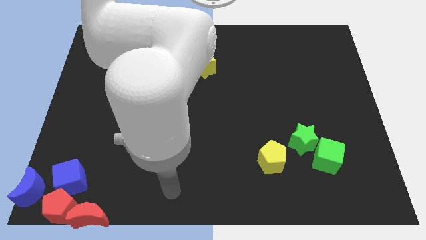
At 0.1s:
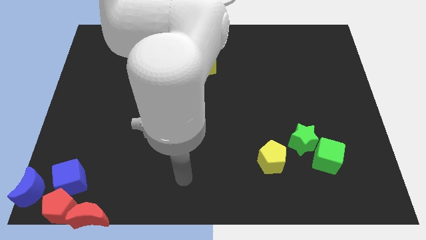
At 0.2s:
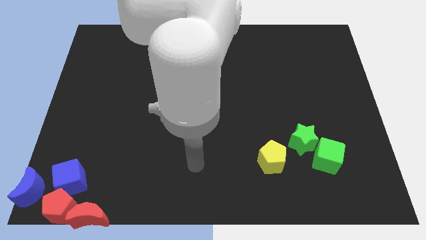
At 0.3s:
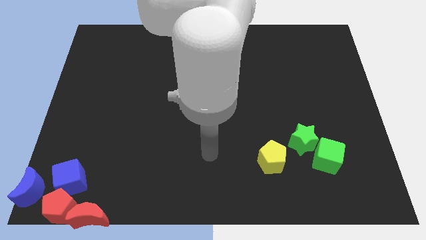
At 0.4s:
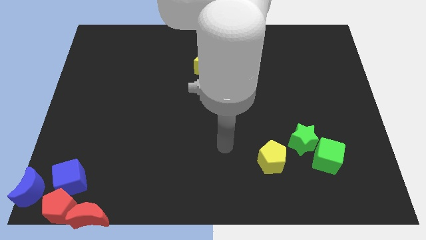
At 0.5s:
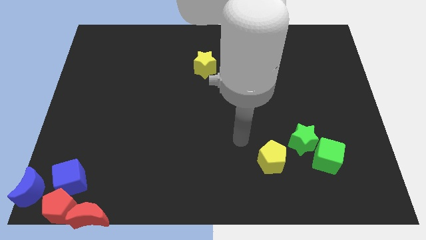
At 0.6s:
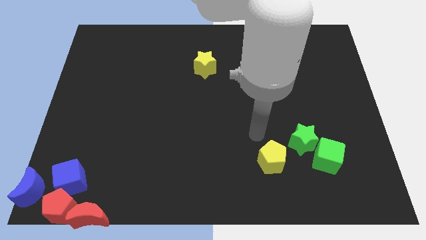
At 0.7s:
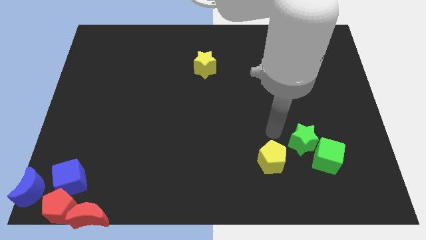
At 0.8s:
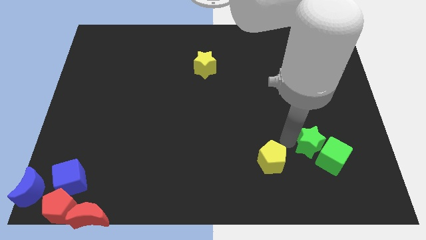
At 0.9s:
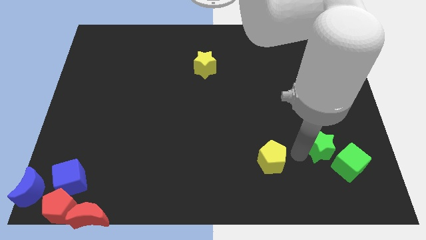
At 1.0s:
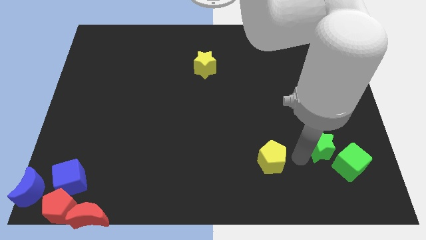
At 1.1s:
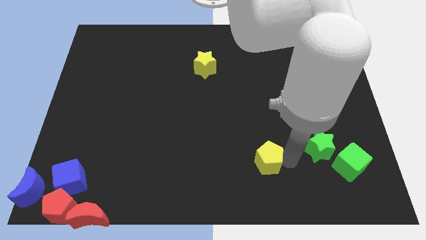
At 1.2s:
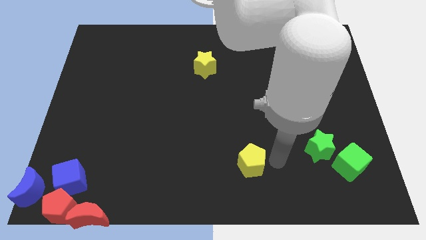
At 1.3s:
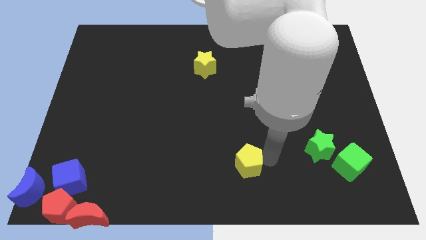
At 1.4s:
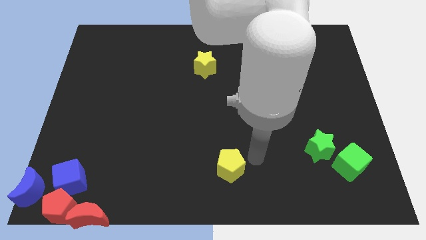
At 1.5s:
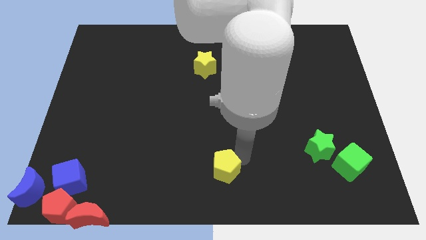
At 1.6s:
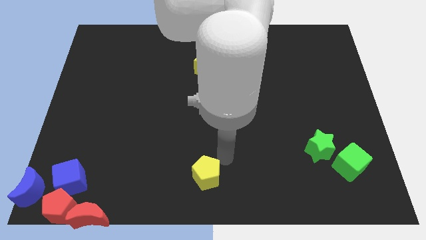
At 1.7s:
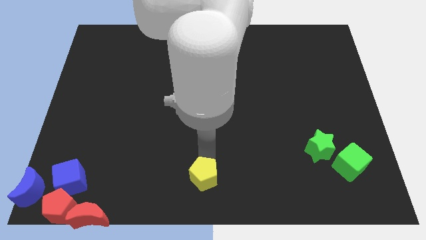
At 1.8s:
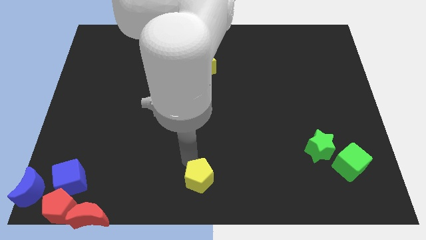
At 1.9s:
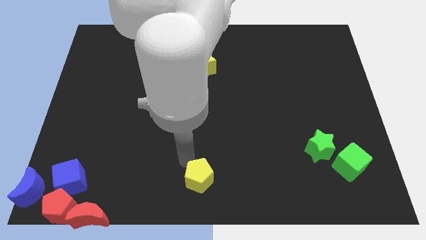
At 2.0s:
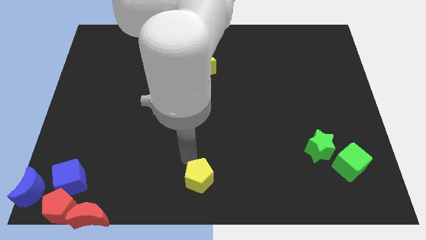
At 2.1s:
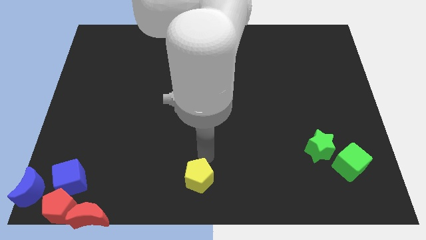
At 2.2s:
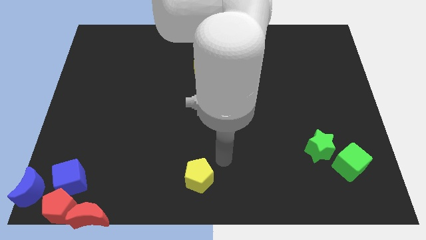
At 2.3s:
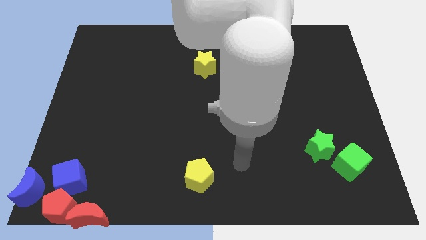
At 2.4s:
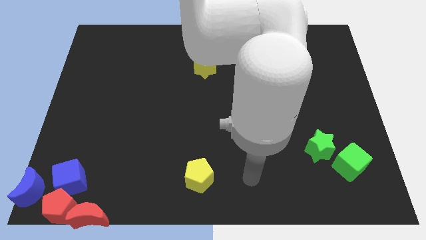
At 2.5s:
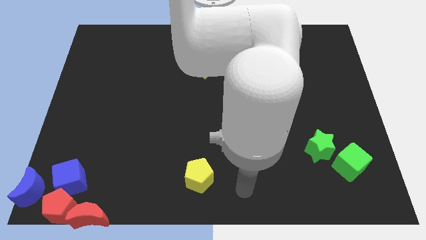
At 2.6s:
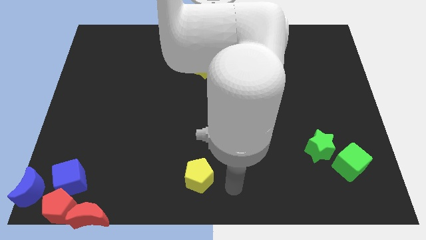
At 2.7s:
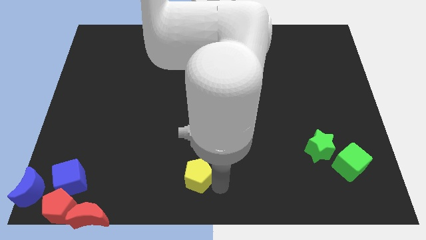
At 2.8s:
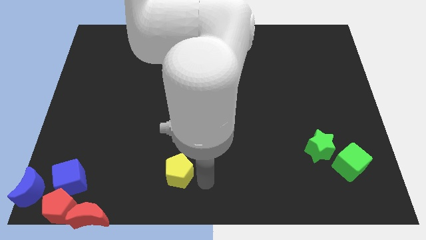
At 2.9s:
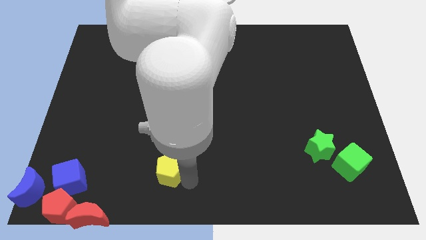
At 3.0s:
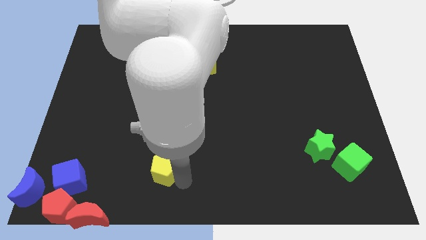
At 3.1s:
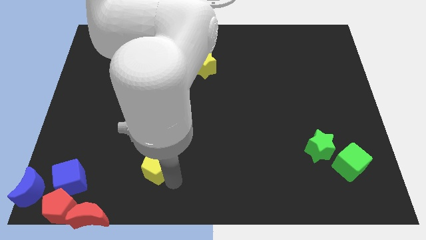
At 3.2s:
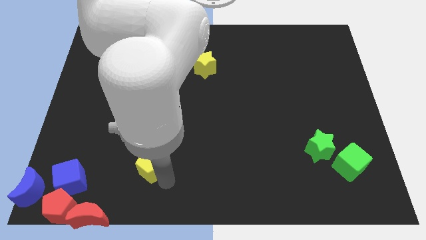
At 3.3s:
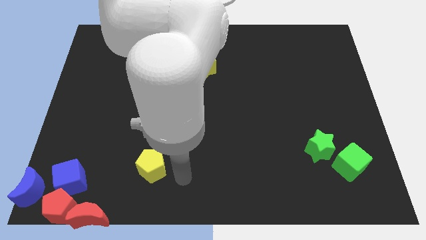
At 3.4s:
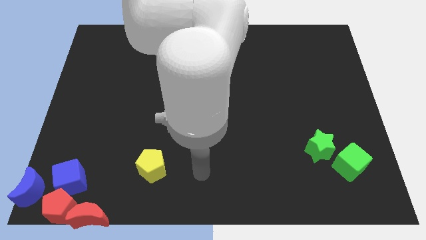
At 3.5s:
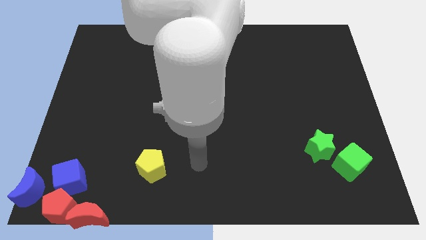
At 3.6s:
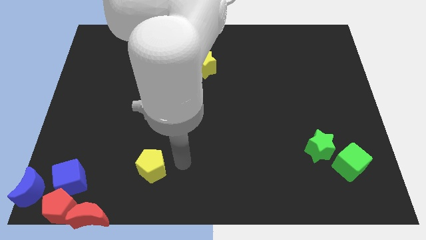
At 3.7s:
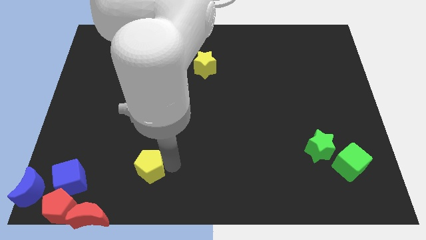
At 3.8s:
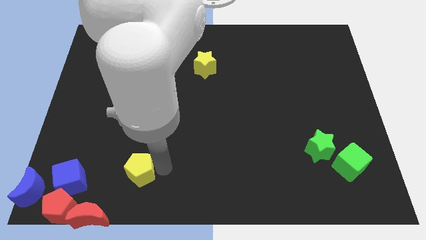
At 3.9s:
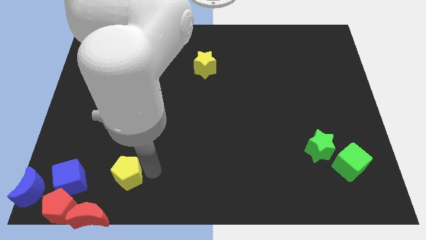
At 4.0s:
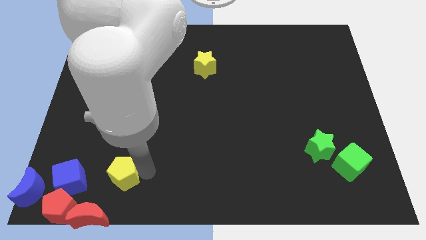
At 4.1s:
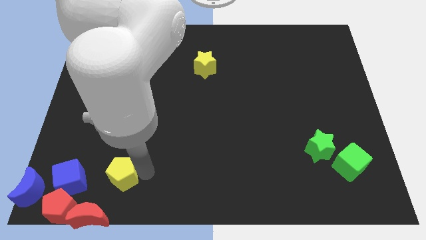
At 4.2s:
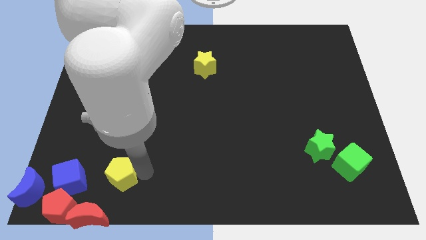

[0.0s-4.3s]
slide the yellow pentagon towards the right side of the blue cube

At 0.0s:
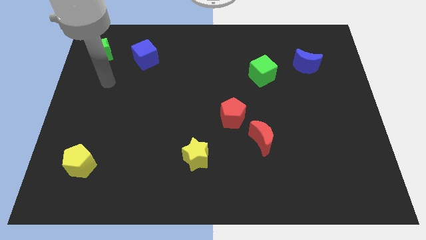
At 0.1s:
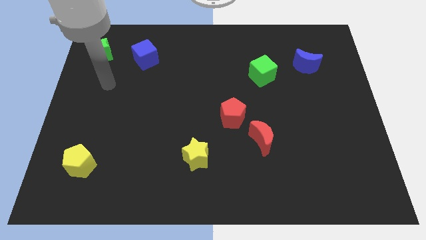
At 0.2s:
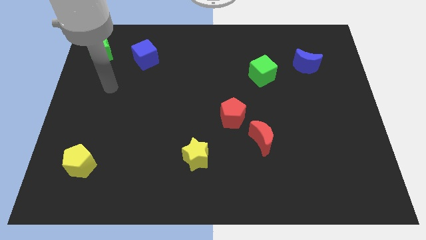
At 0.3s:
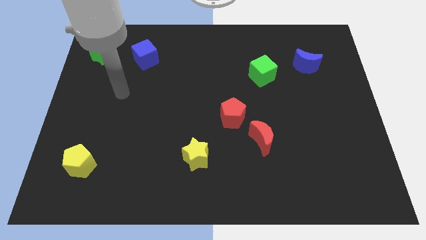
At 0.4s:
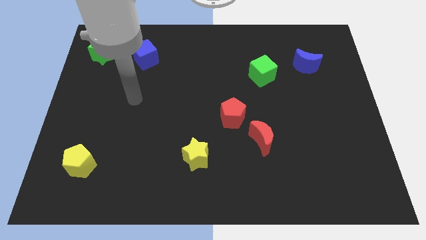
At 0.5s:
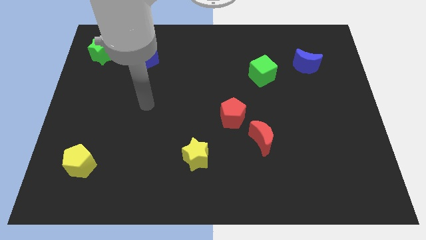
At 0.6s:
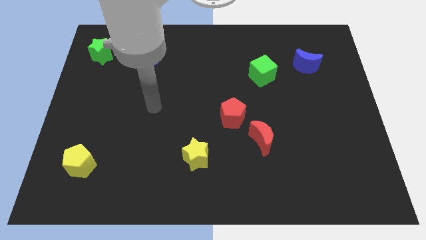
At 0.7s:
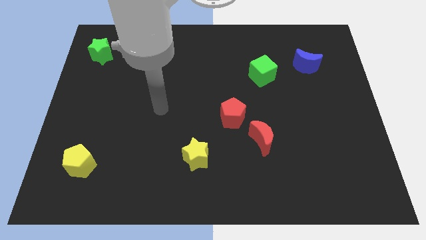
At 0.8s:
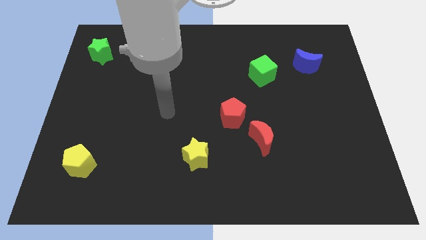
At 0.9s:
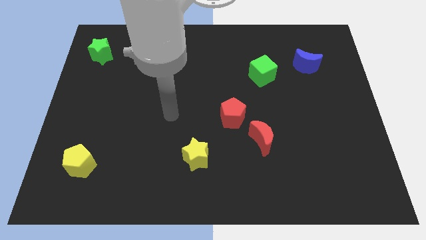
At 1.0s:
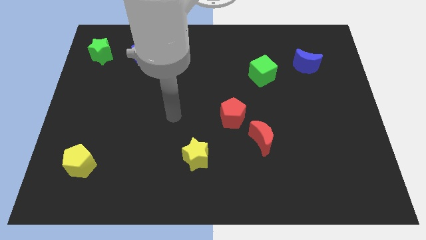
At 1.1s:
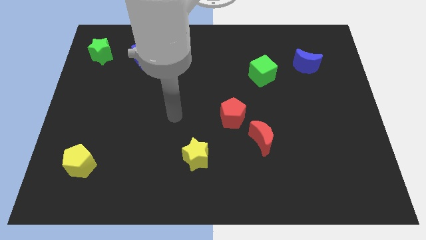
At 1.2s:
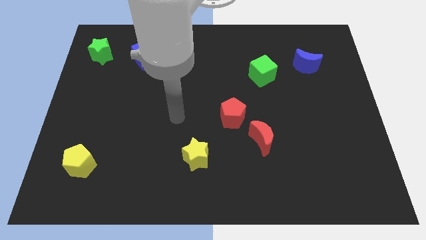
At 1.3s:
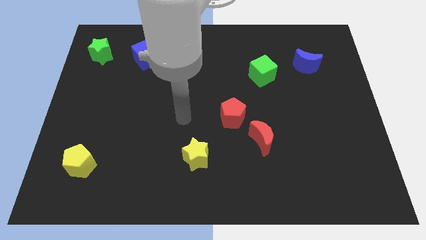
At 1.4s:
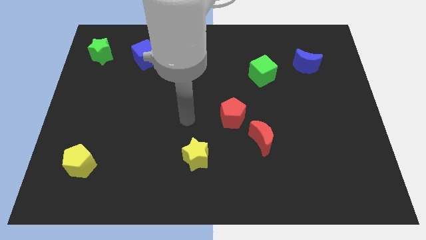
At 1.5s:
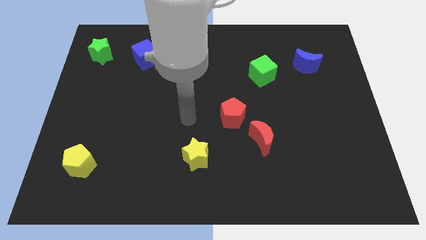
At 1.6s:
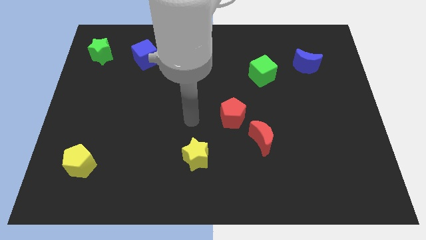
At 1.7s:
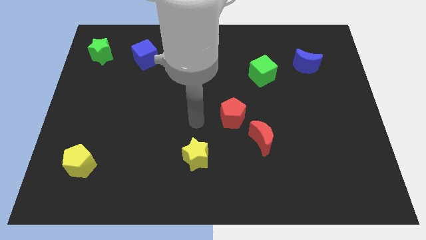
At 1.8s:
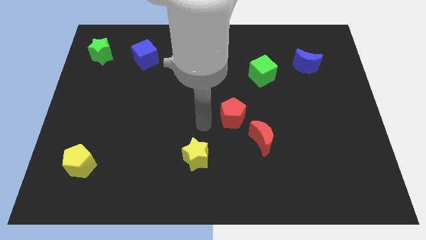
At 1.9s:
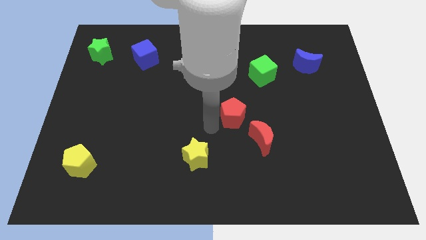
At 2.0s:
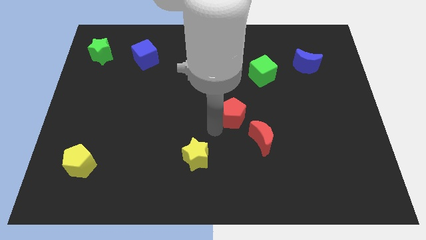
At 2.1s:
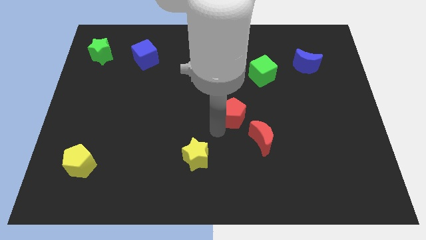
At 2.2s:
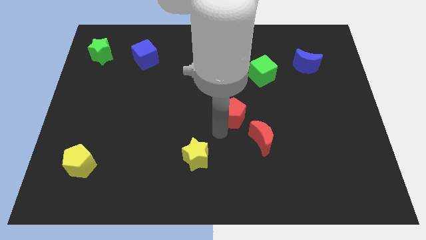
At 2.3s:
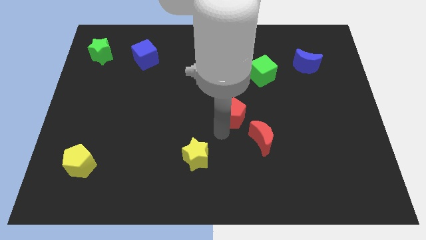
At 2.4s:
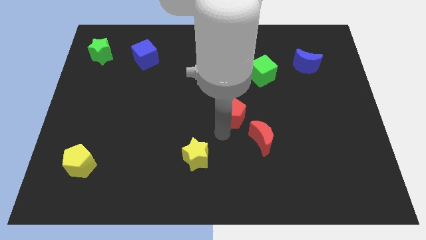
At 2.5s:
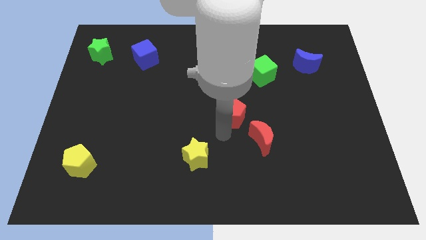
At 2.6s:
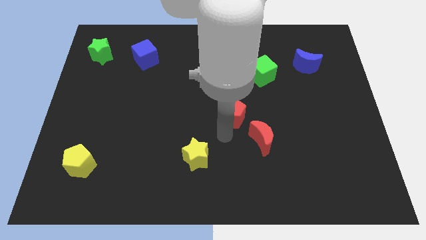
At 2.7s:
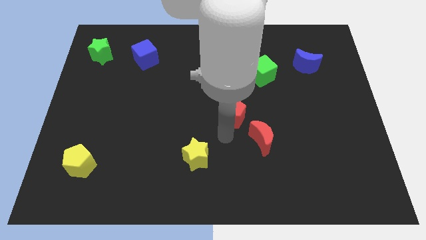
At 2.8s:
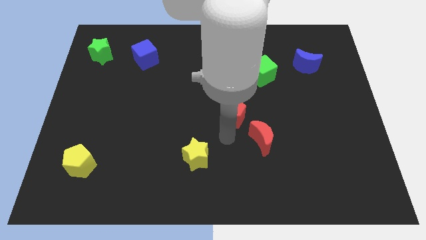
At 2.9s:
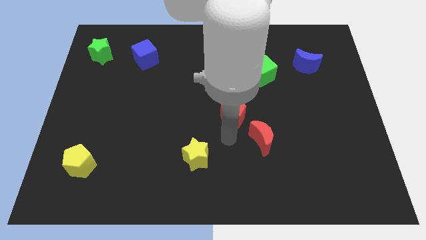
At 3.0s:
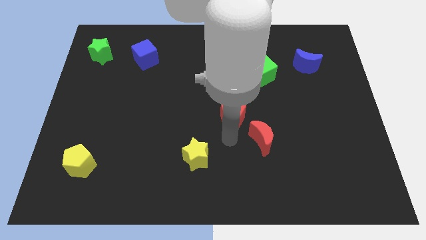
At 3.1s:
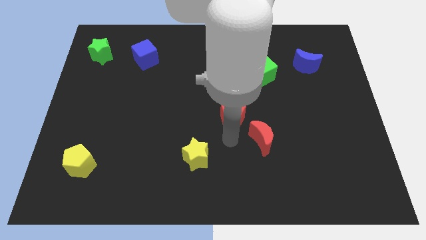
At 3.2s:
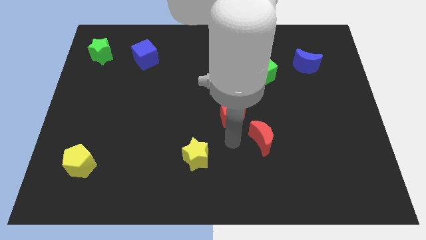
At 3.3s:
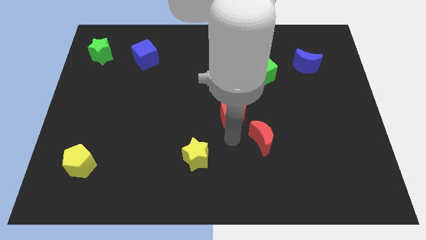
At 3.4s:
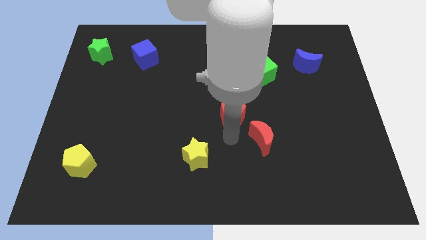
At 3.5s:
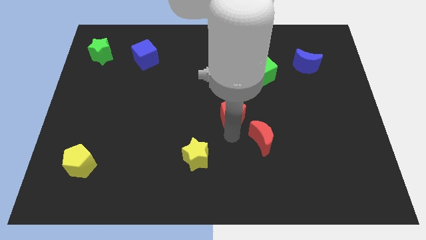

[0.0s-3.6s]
bring the arm in a diagonal way to the bottom of red pentagon

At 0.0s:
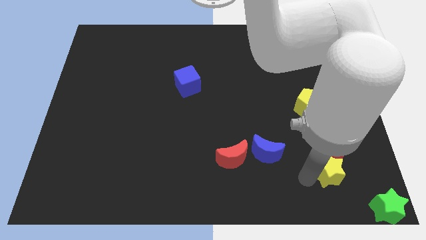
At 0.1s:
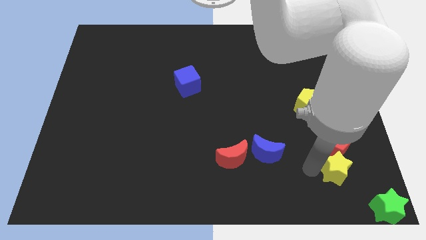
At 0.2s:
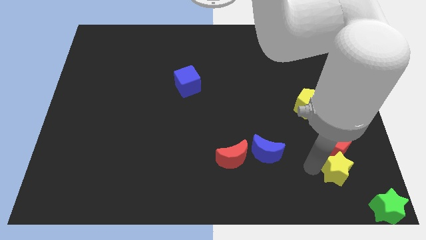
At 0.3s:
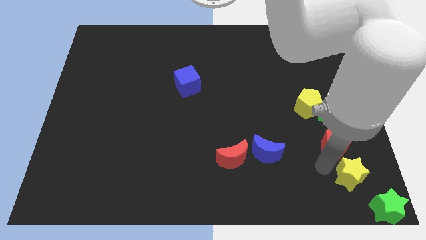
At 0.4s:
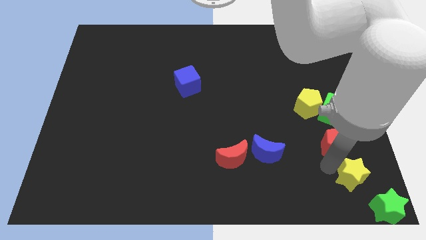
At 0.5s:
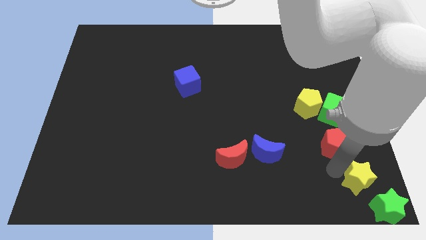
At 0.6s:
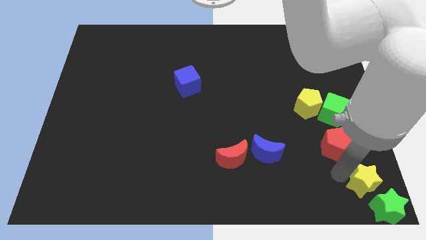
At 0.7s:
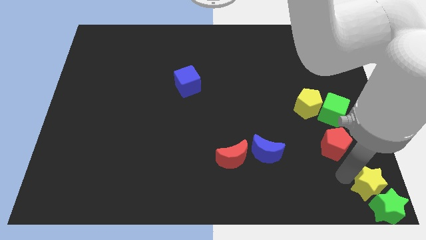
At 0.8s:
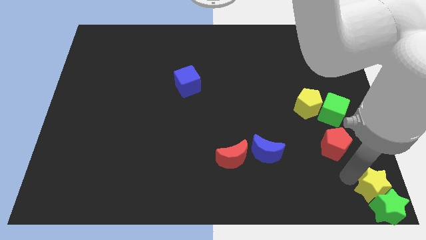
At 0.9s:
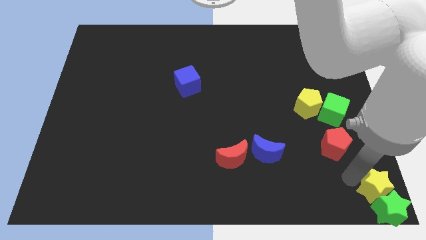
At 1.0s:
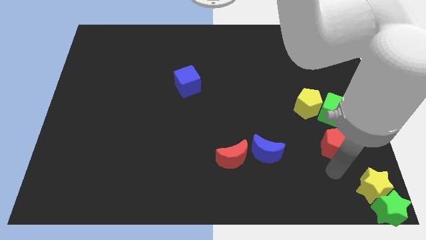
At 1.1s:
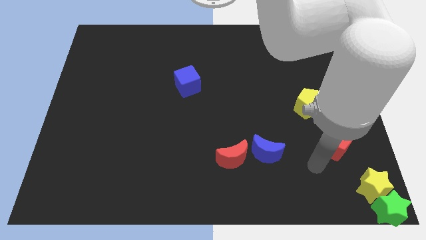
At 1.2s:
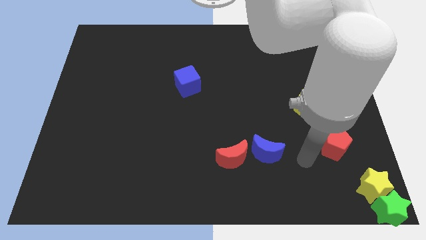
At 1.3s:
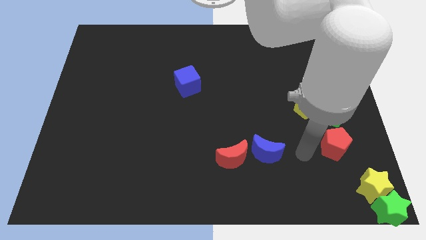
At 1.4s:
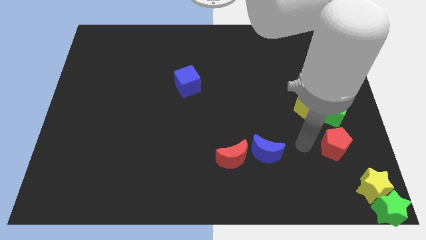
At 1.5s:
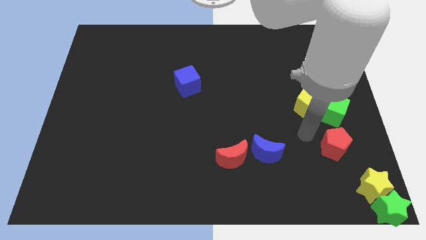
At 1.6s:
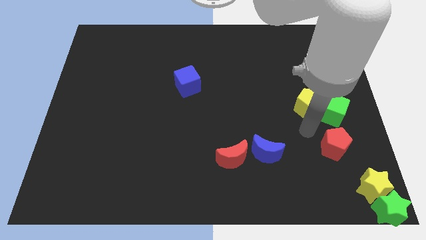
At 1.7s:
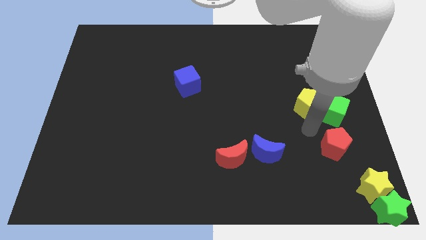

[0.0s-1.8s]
move the yellow star diagonally to the green star
